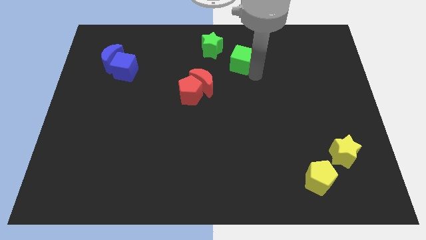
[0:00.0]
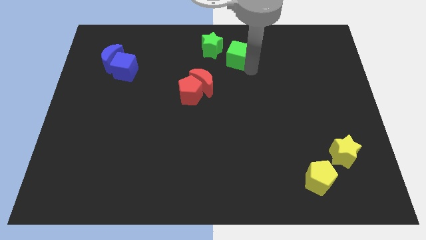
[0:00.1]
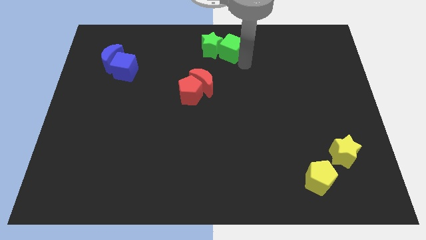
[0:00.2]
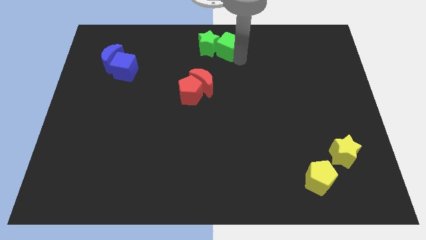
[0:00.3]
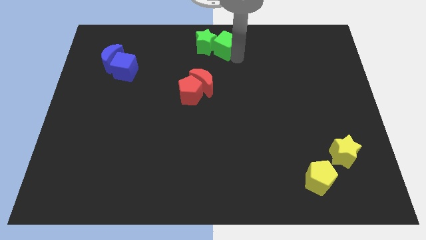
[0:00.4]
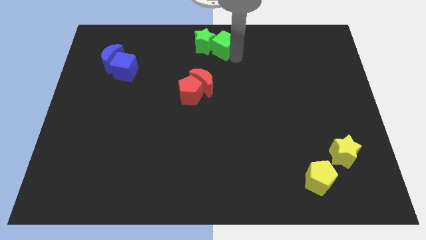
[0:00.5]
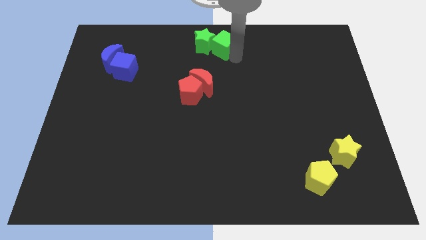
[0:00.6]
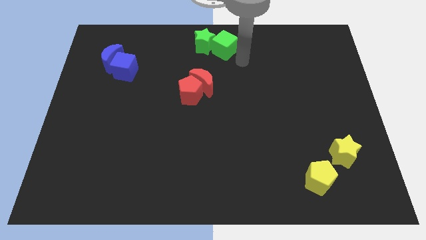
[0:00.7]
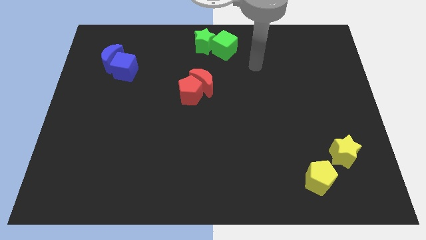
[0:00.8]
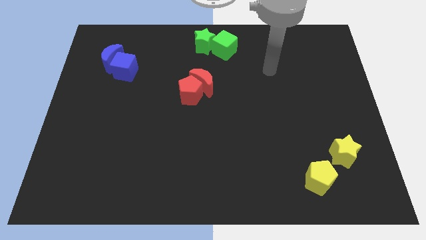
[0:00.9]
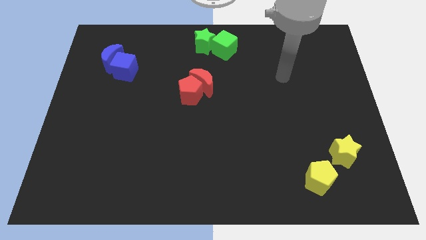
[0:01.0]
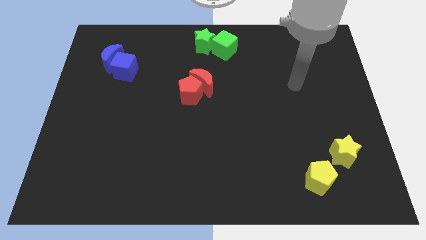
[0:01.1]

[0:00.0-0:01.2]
slide the green blocks towards the top center of the board

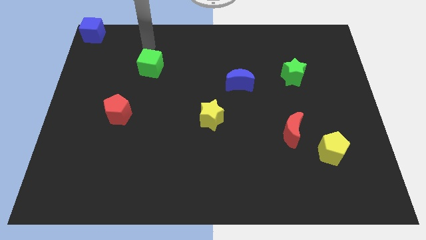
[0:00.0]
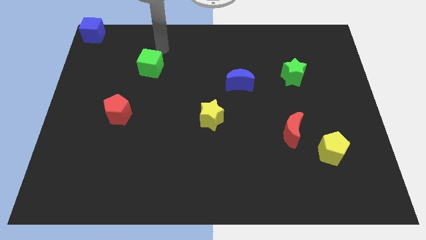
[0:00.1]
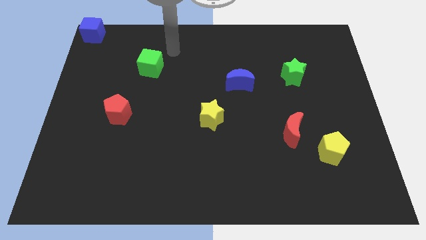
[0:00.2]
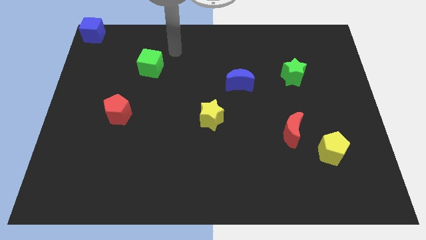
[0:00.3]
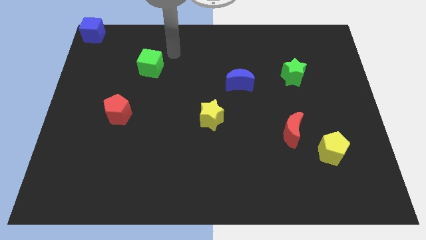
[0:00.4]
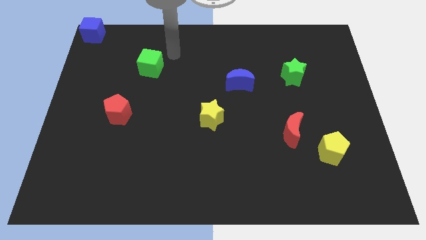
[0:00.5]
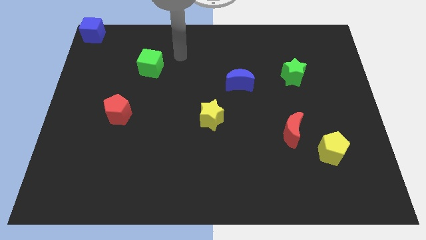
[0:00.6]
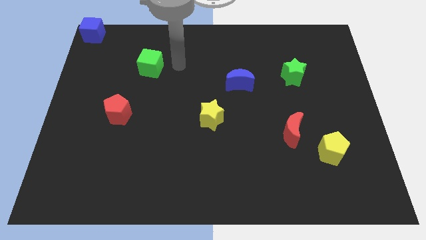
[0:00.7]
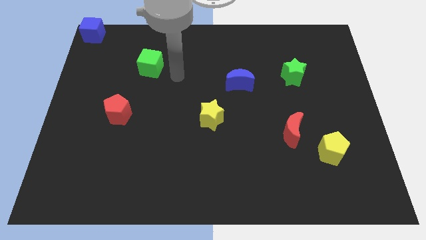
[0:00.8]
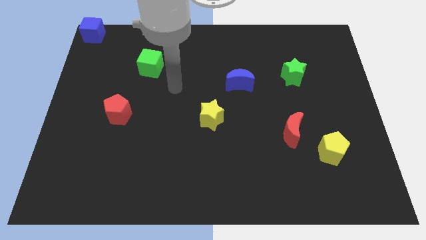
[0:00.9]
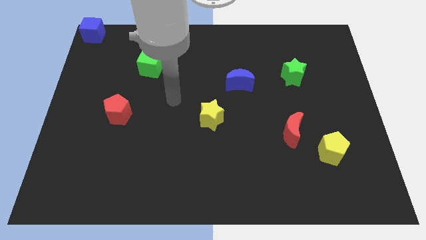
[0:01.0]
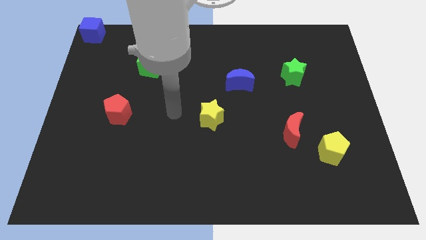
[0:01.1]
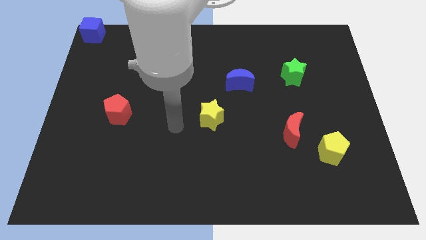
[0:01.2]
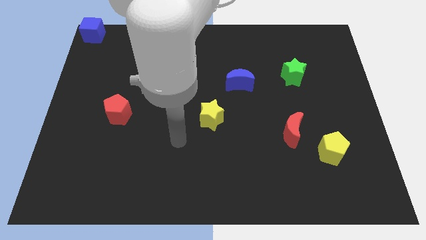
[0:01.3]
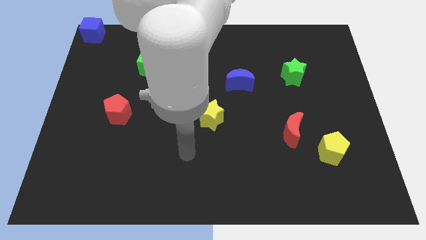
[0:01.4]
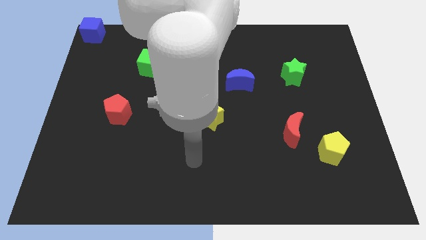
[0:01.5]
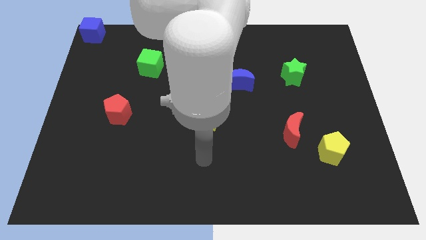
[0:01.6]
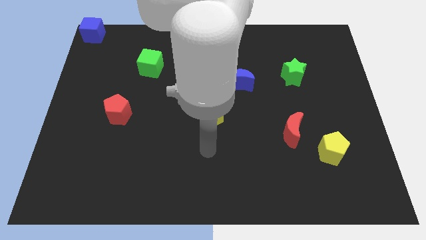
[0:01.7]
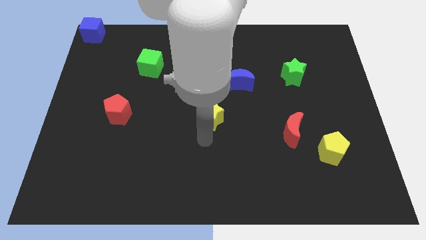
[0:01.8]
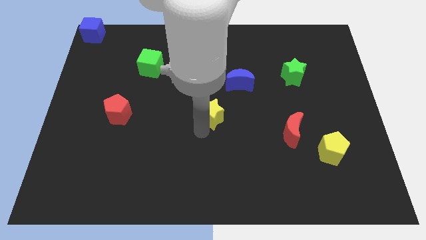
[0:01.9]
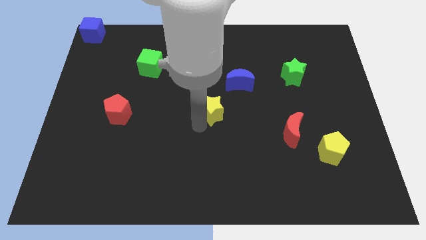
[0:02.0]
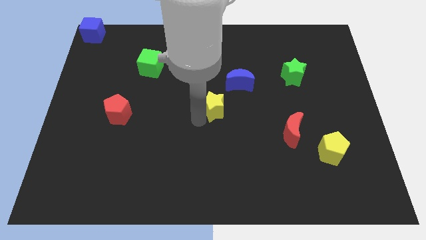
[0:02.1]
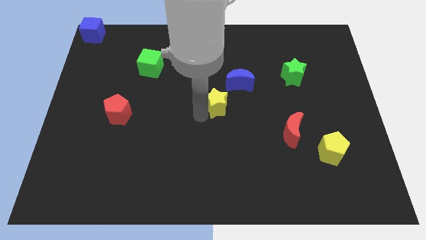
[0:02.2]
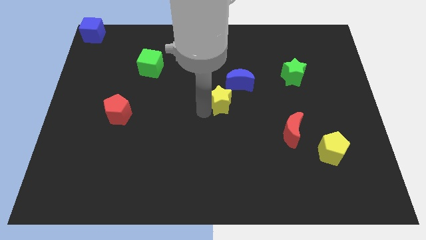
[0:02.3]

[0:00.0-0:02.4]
push the yellow star slightly to the top

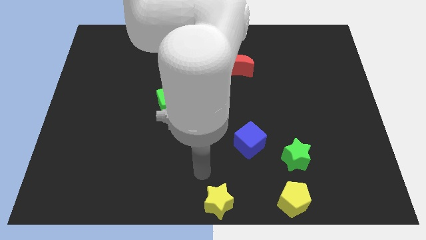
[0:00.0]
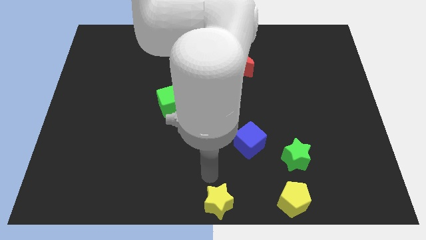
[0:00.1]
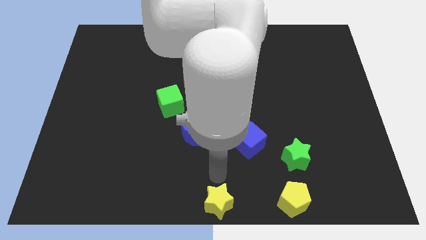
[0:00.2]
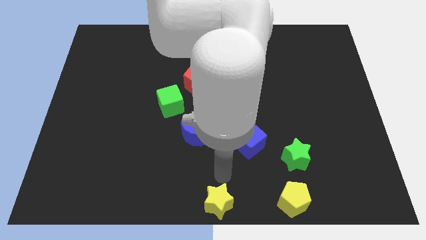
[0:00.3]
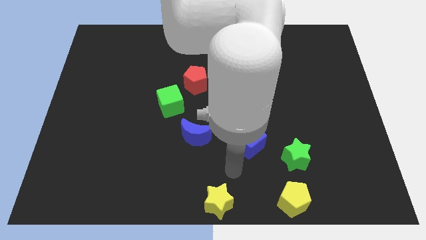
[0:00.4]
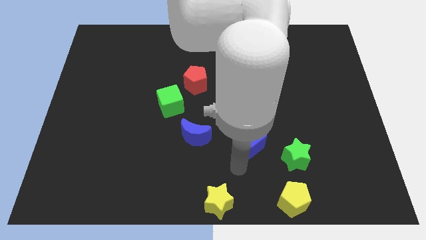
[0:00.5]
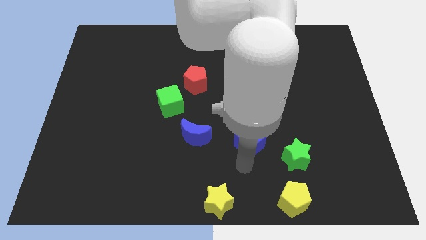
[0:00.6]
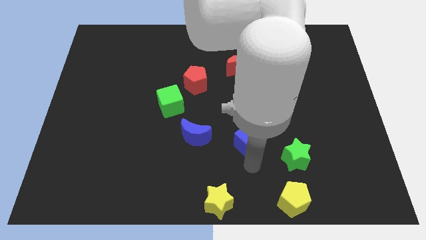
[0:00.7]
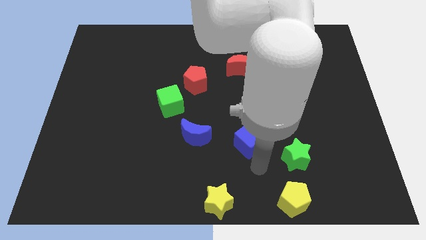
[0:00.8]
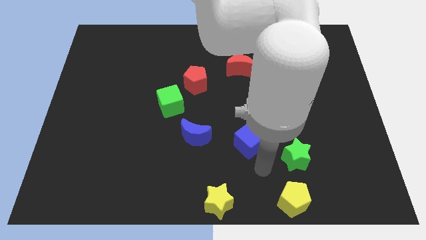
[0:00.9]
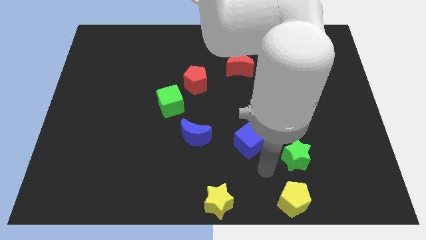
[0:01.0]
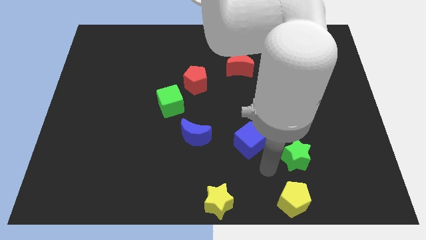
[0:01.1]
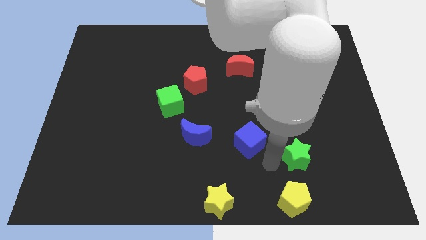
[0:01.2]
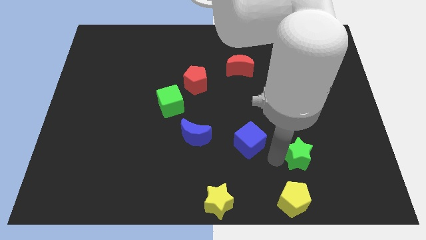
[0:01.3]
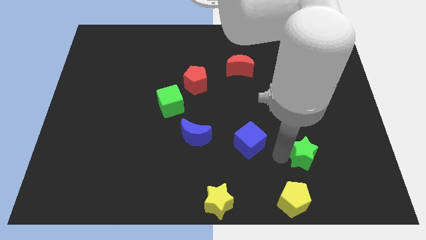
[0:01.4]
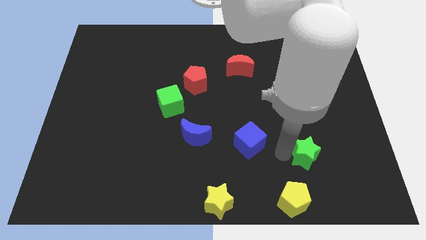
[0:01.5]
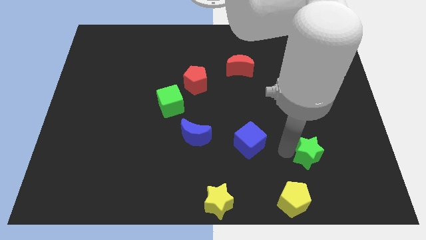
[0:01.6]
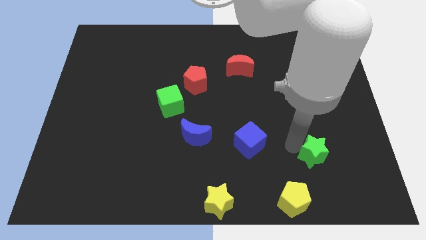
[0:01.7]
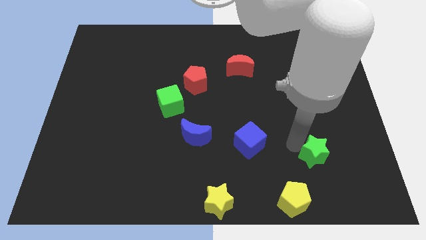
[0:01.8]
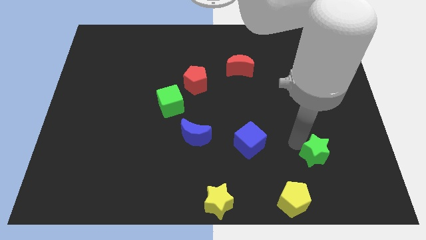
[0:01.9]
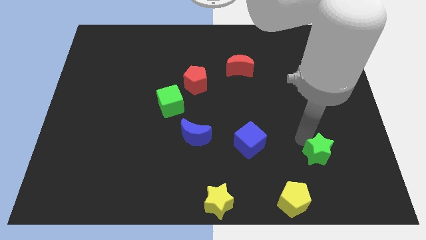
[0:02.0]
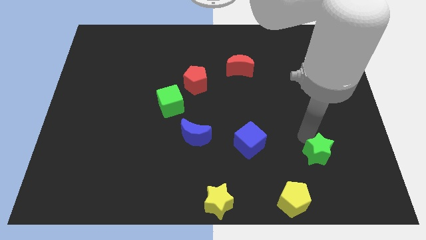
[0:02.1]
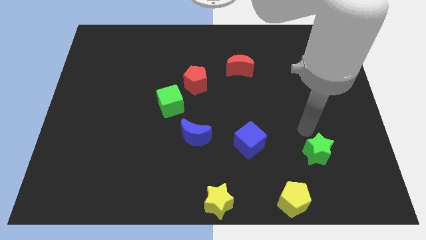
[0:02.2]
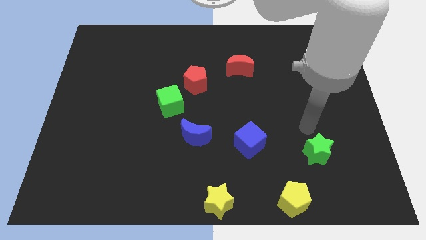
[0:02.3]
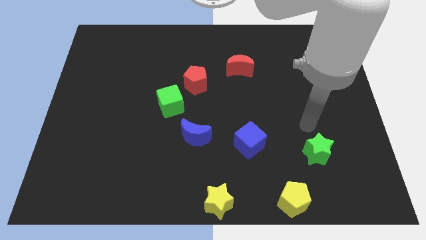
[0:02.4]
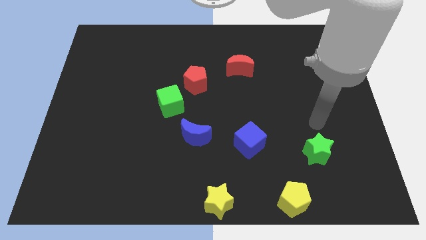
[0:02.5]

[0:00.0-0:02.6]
move the green star diagonally to yellow pentagon

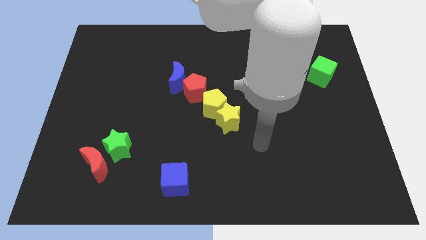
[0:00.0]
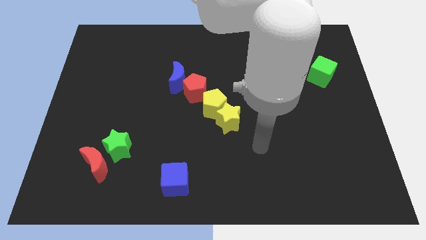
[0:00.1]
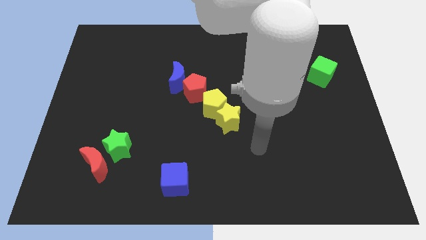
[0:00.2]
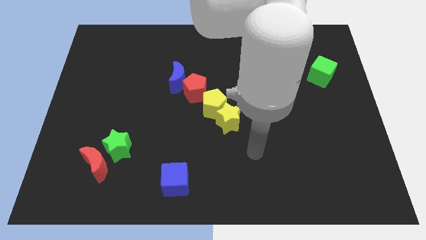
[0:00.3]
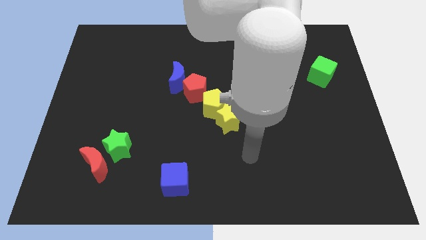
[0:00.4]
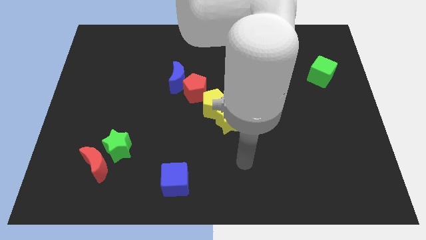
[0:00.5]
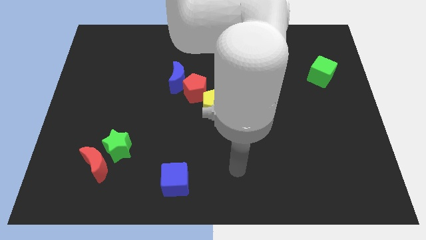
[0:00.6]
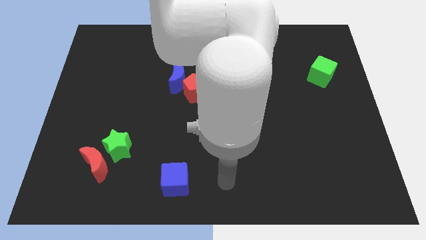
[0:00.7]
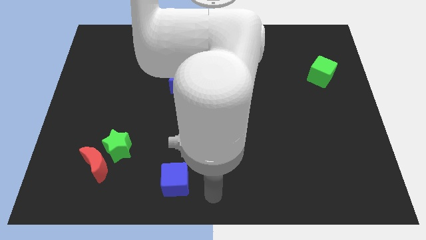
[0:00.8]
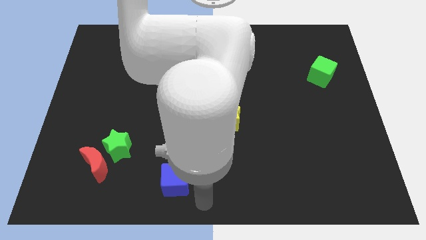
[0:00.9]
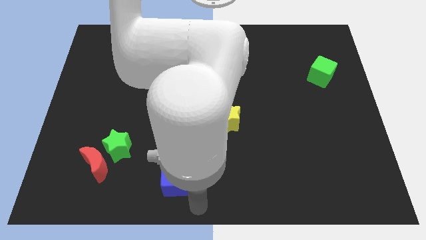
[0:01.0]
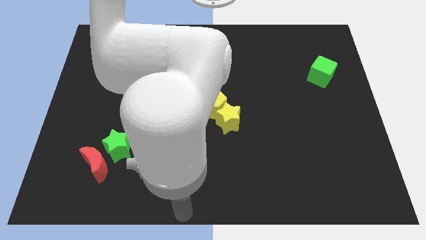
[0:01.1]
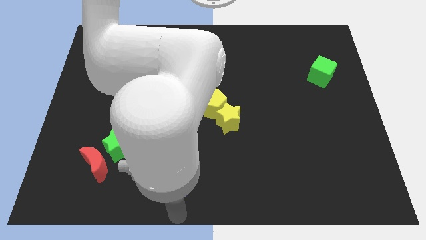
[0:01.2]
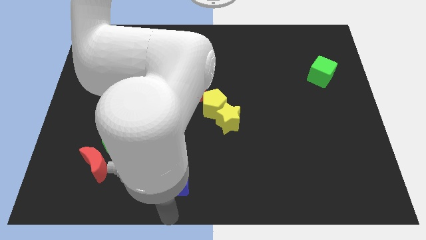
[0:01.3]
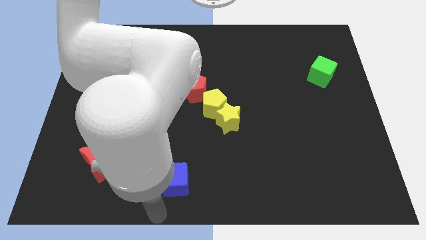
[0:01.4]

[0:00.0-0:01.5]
move the arm to the bottom of the blue cube

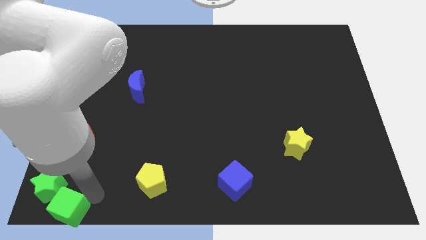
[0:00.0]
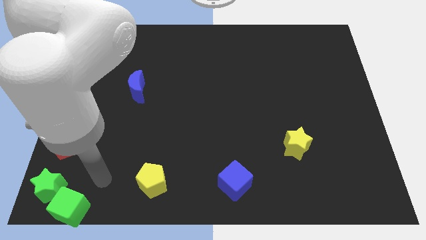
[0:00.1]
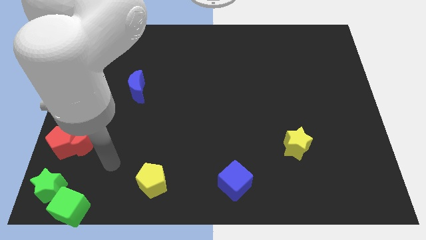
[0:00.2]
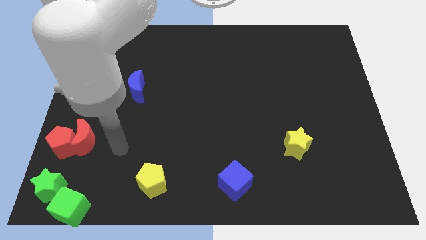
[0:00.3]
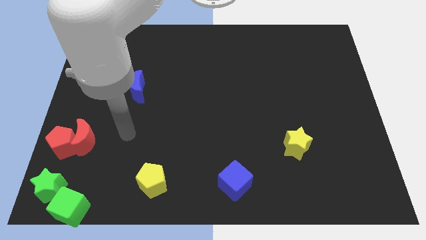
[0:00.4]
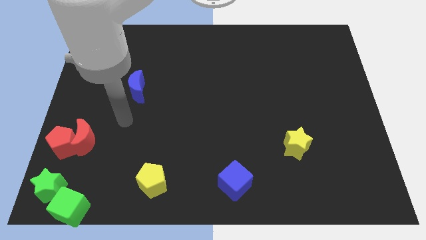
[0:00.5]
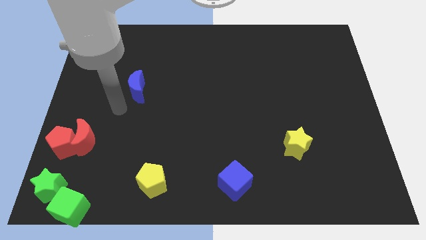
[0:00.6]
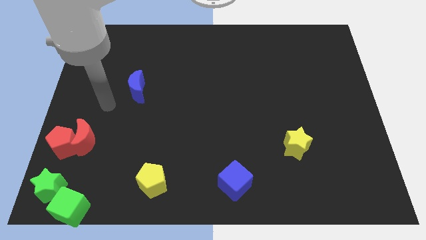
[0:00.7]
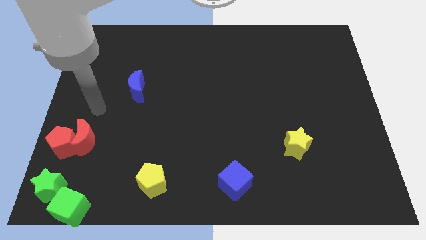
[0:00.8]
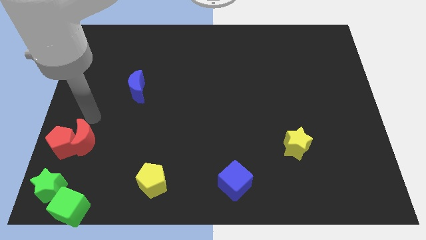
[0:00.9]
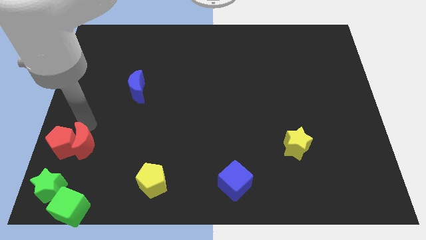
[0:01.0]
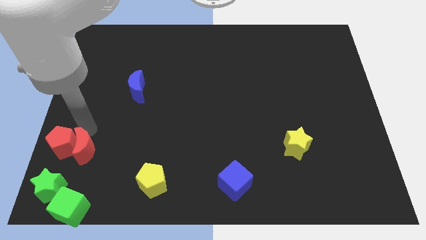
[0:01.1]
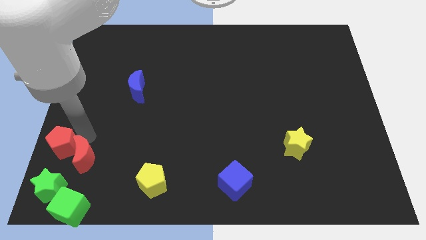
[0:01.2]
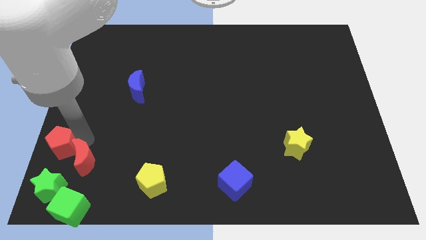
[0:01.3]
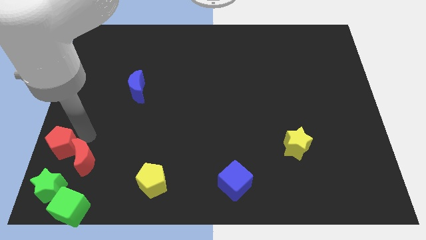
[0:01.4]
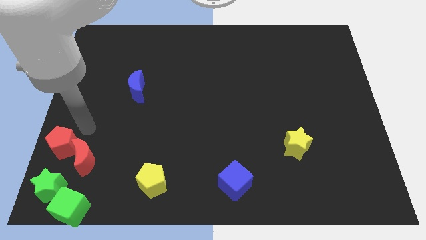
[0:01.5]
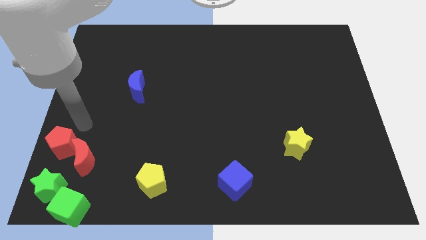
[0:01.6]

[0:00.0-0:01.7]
move the red moon slightly downward
